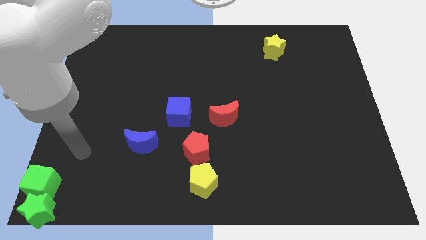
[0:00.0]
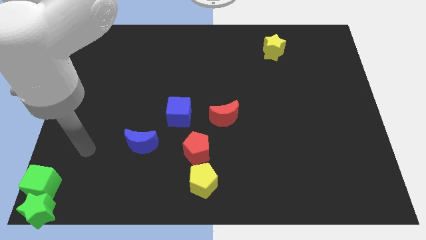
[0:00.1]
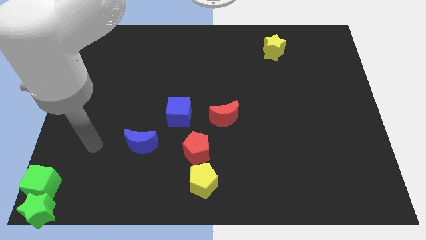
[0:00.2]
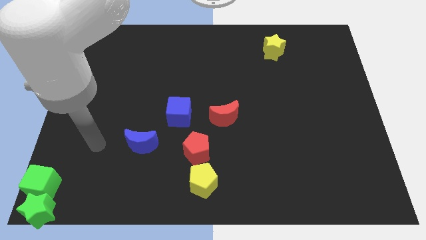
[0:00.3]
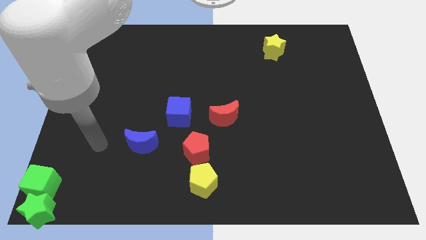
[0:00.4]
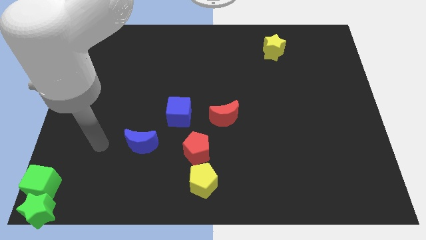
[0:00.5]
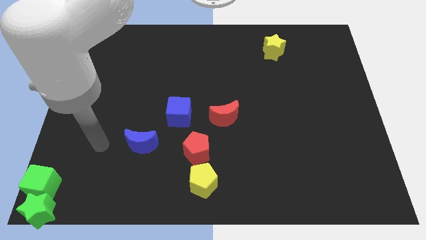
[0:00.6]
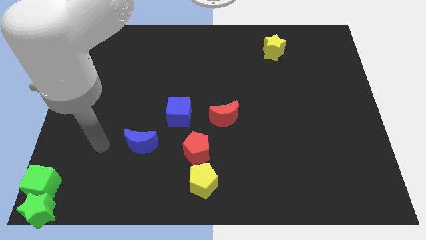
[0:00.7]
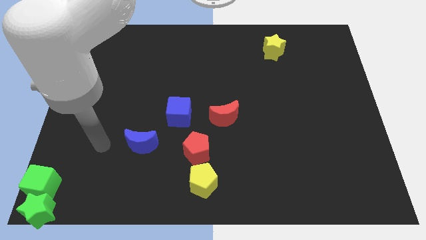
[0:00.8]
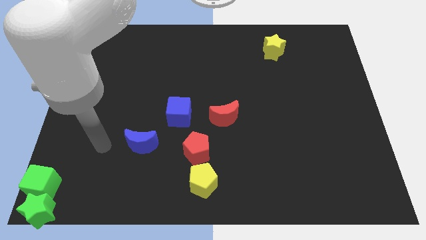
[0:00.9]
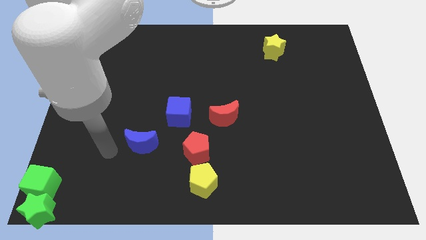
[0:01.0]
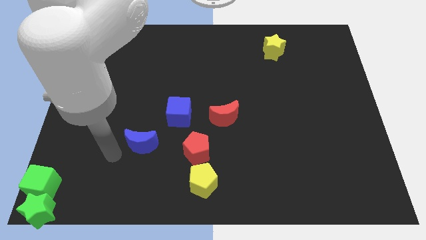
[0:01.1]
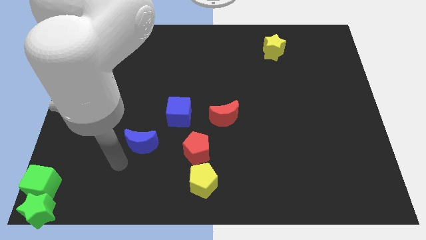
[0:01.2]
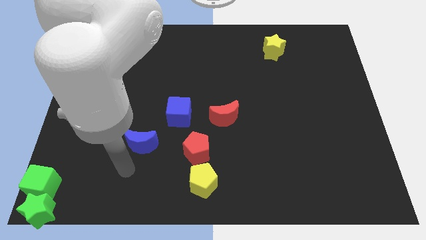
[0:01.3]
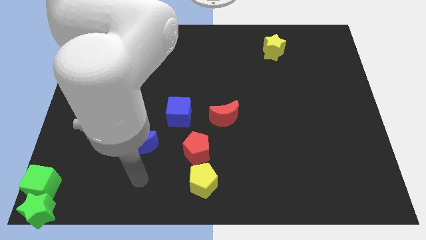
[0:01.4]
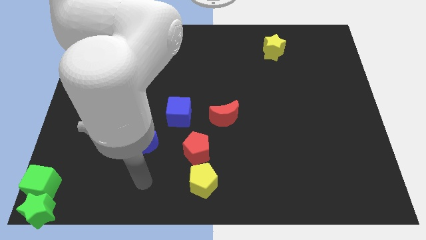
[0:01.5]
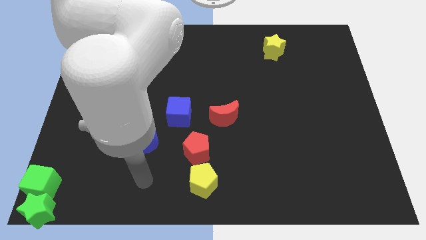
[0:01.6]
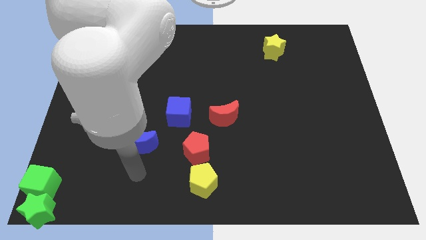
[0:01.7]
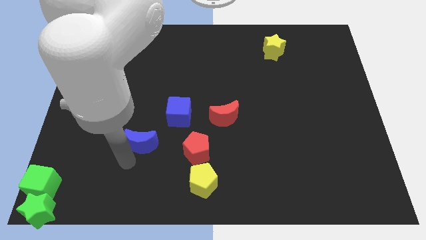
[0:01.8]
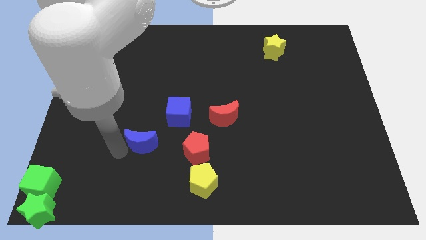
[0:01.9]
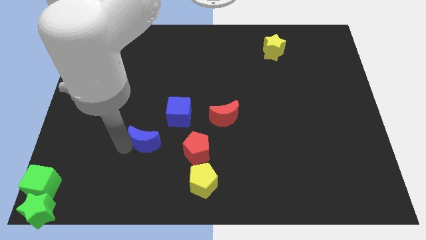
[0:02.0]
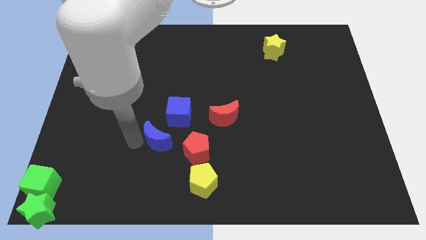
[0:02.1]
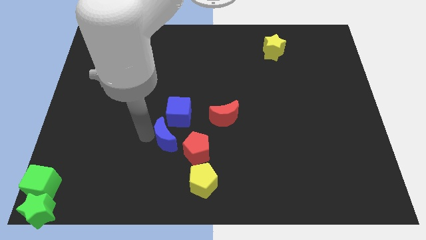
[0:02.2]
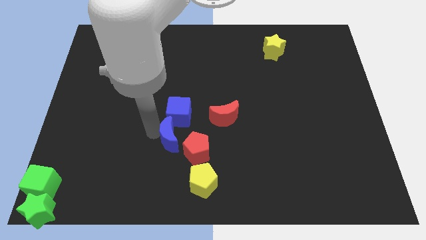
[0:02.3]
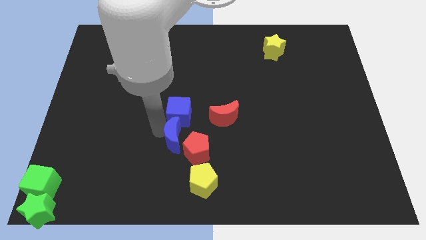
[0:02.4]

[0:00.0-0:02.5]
place blue moon below the blue cube

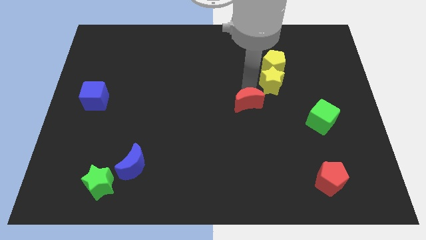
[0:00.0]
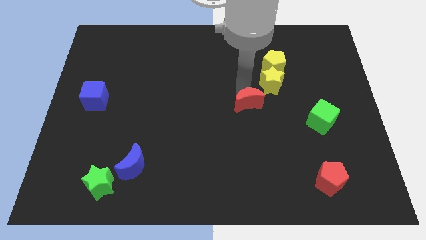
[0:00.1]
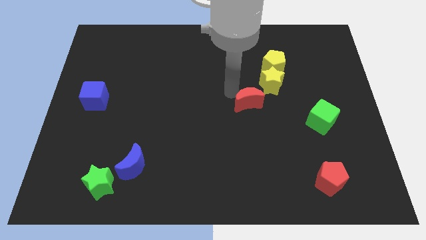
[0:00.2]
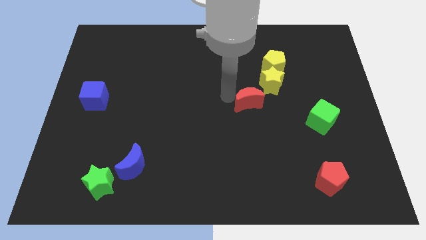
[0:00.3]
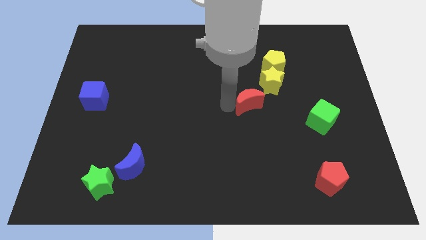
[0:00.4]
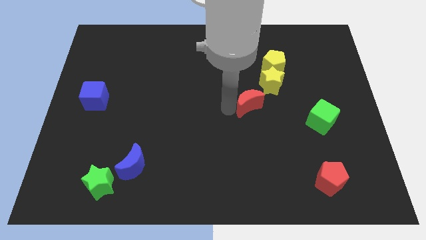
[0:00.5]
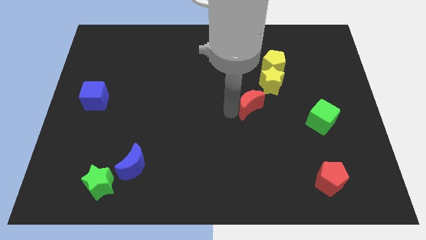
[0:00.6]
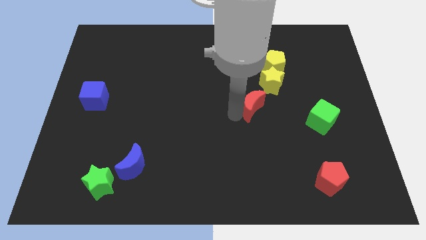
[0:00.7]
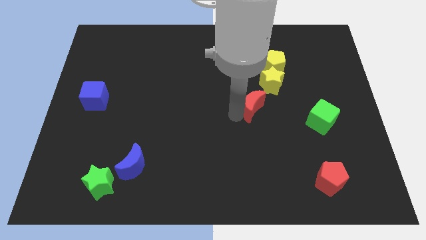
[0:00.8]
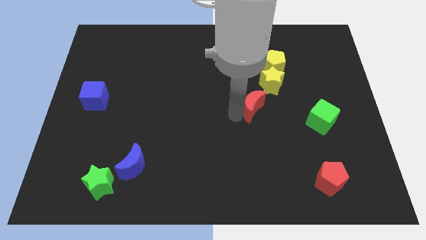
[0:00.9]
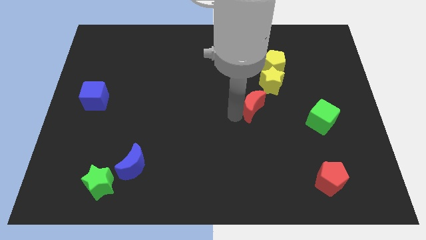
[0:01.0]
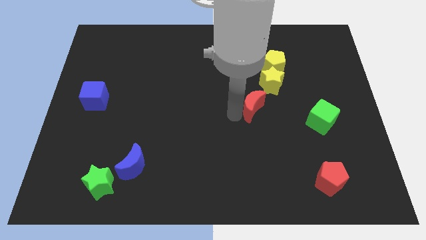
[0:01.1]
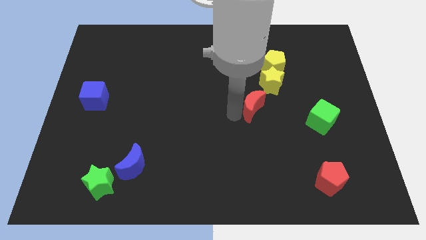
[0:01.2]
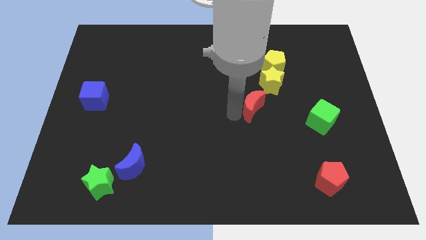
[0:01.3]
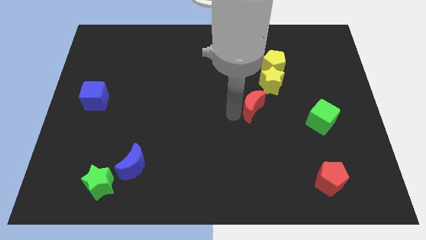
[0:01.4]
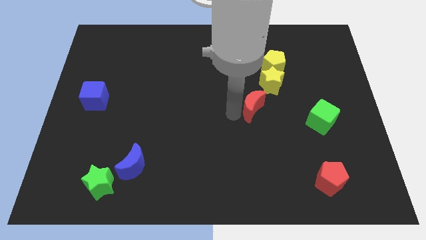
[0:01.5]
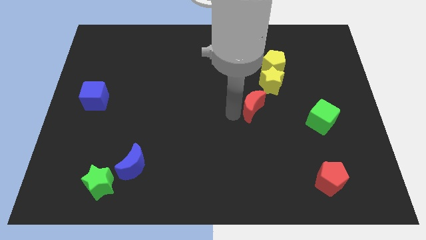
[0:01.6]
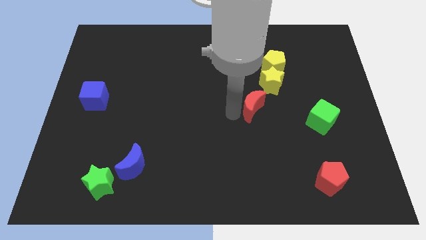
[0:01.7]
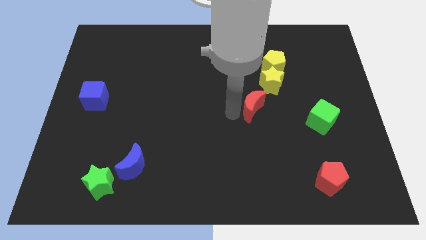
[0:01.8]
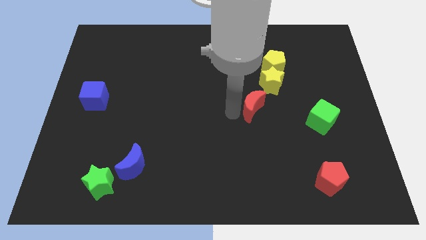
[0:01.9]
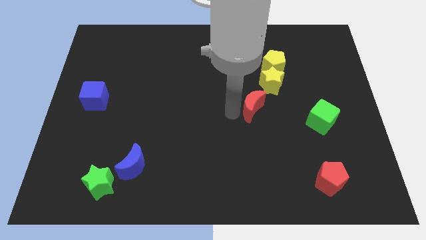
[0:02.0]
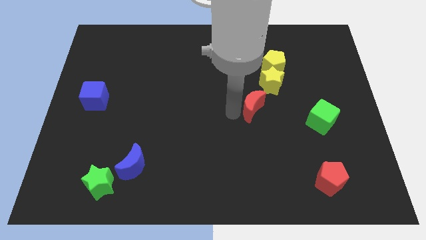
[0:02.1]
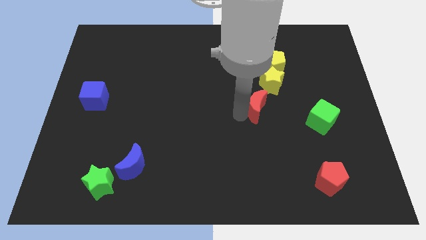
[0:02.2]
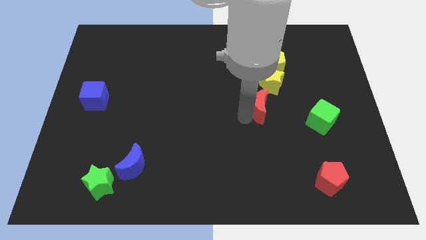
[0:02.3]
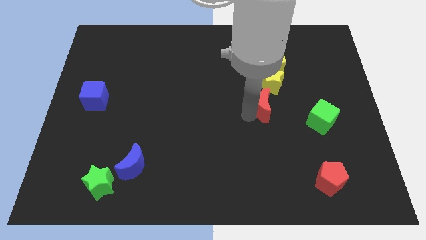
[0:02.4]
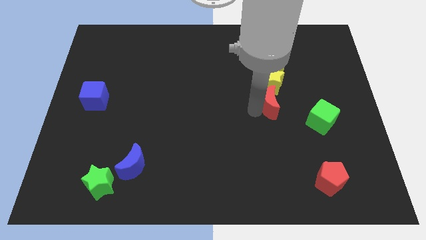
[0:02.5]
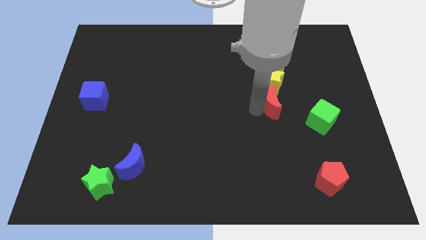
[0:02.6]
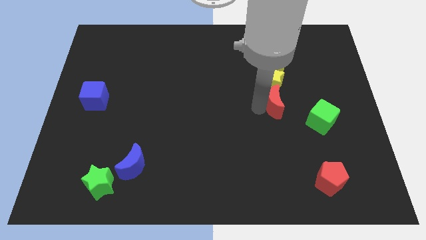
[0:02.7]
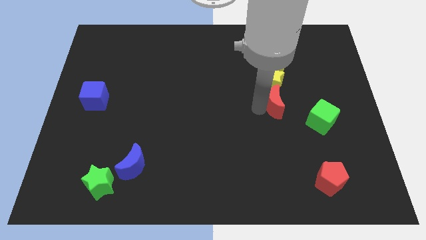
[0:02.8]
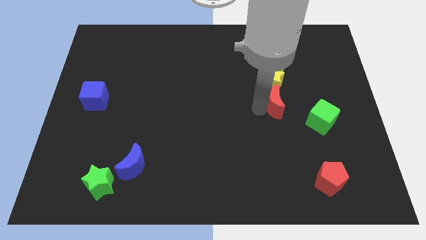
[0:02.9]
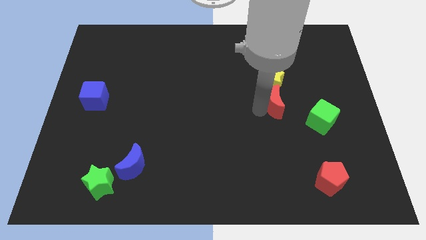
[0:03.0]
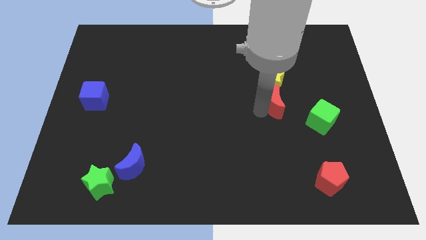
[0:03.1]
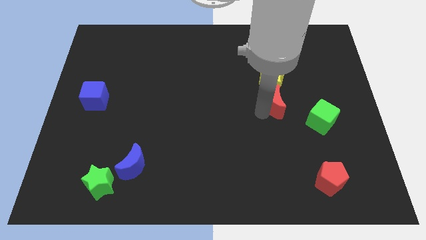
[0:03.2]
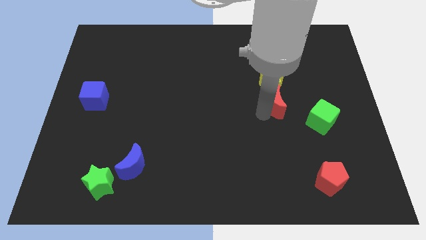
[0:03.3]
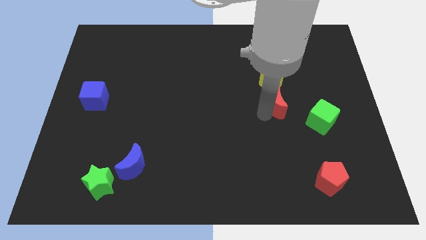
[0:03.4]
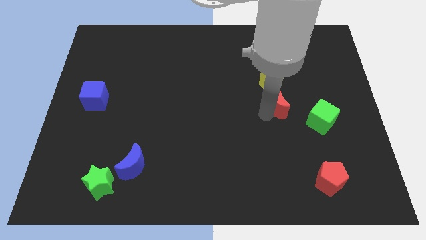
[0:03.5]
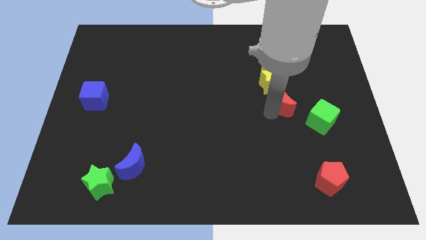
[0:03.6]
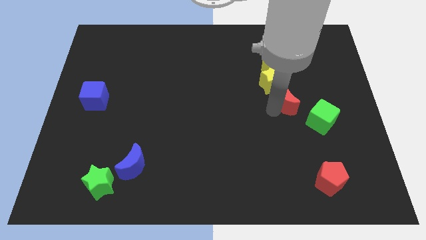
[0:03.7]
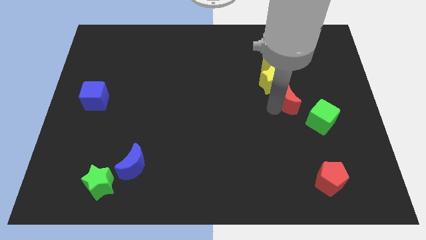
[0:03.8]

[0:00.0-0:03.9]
push the red crescent to the bottom of the yellow star

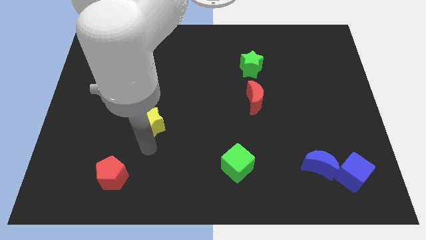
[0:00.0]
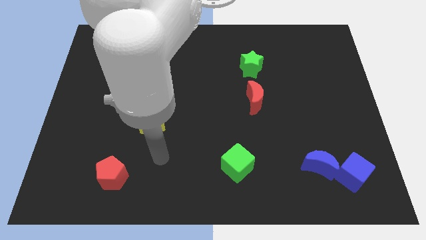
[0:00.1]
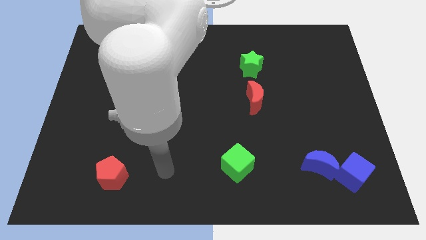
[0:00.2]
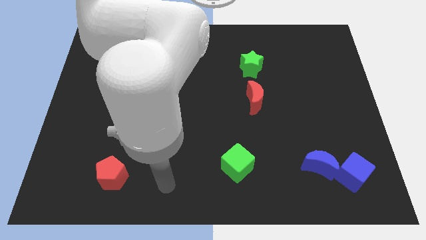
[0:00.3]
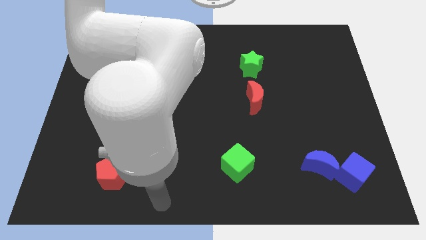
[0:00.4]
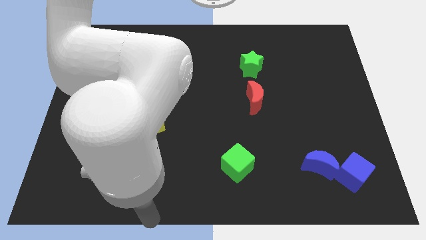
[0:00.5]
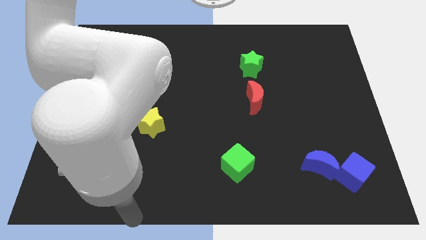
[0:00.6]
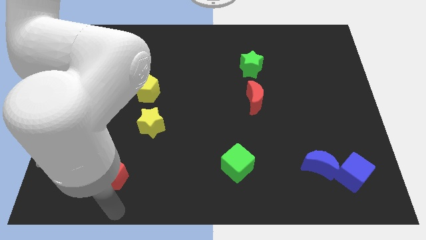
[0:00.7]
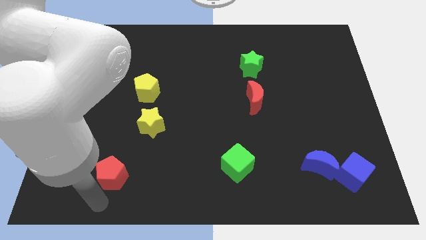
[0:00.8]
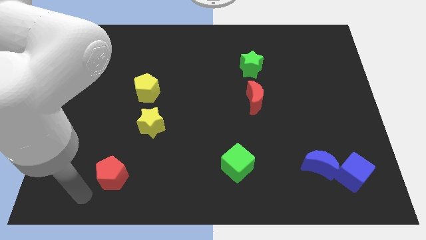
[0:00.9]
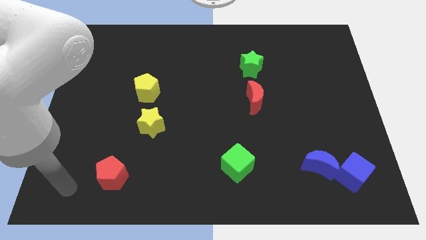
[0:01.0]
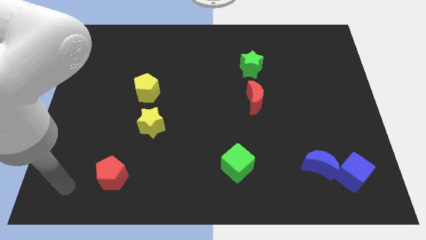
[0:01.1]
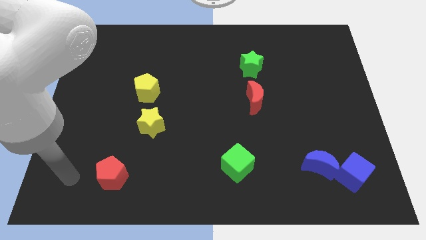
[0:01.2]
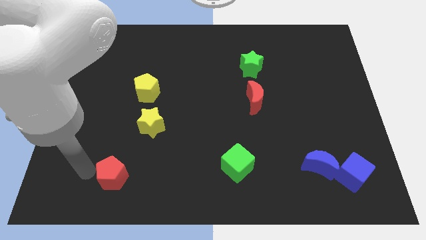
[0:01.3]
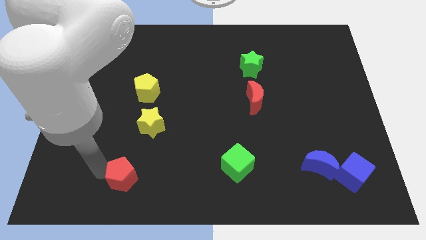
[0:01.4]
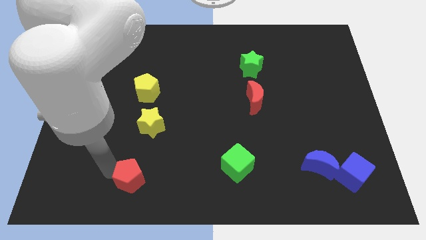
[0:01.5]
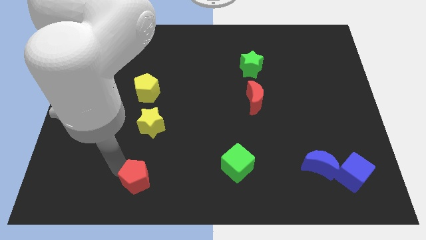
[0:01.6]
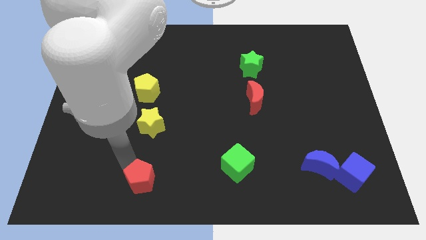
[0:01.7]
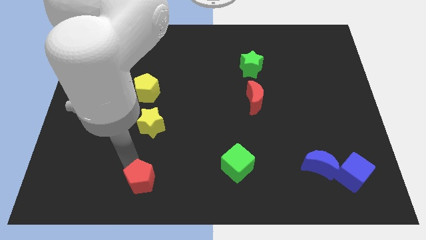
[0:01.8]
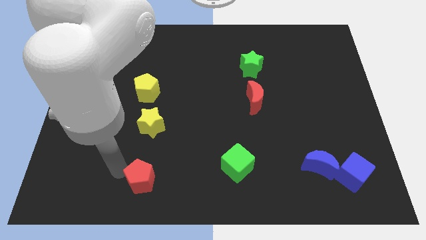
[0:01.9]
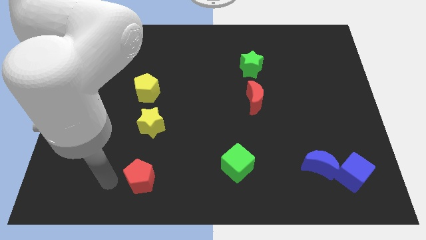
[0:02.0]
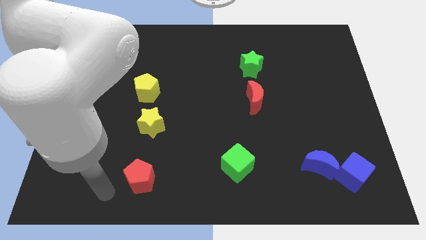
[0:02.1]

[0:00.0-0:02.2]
move the red pentagon to the right

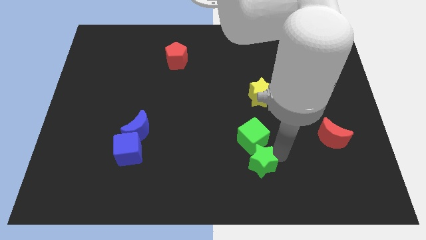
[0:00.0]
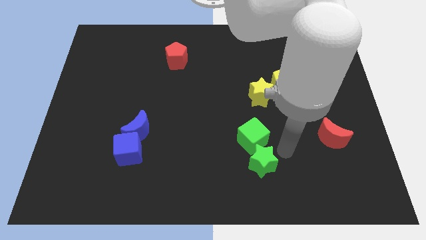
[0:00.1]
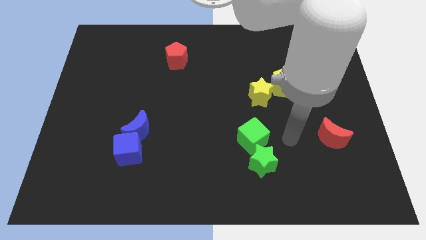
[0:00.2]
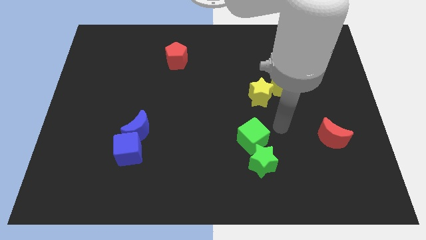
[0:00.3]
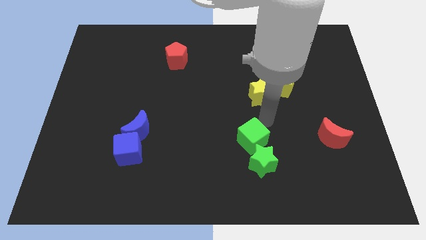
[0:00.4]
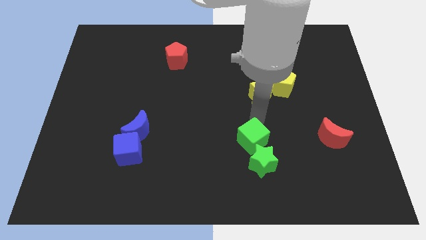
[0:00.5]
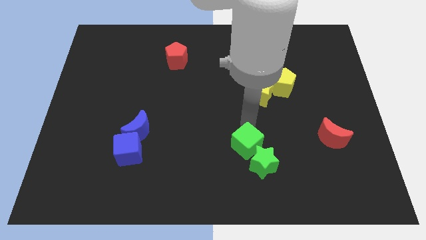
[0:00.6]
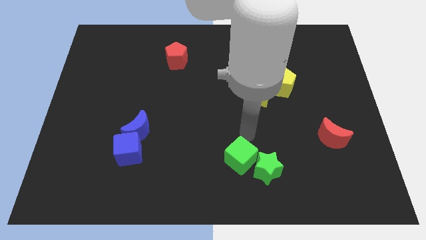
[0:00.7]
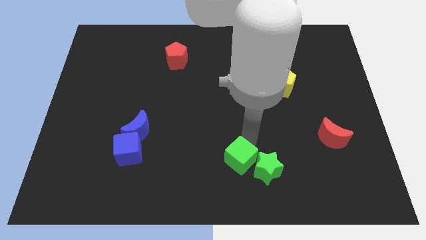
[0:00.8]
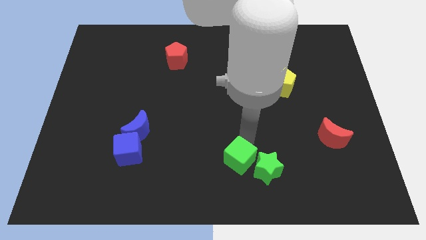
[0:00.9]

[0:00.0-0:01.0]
place the green cube diagonal to the top left of the green star
